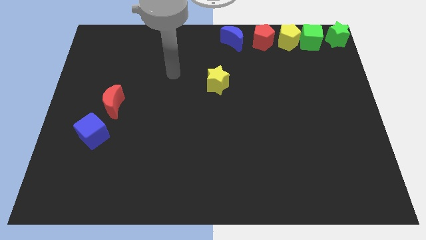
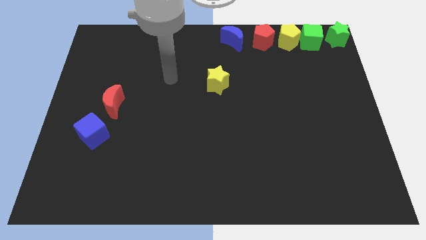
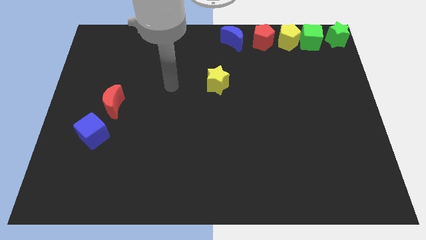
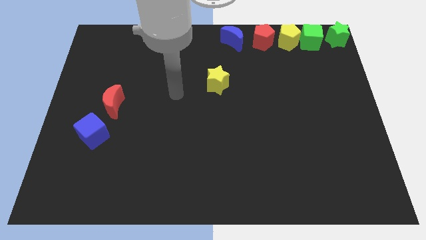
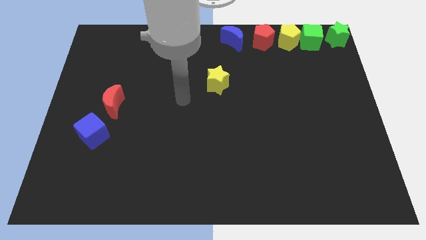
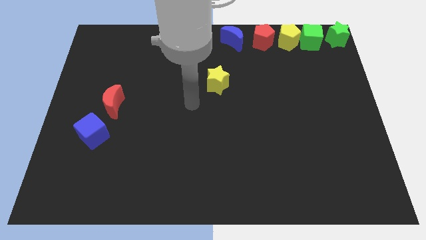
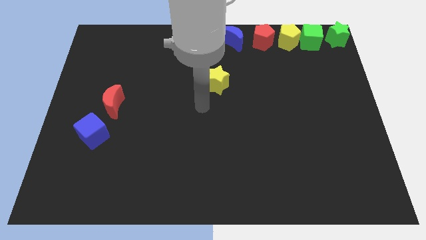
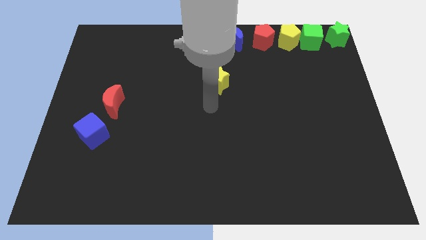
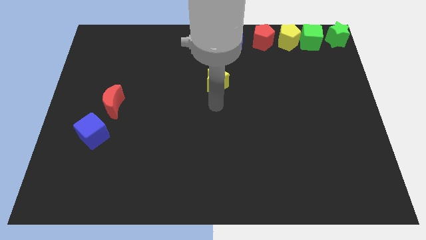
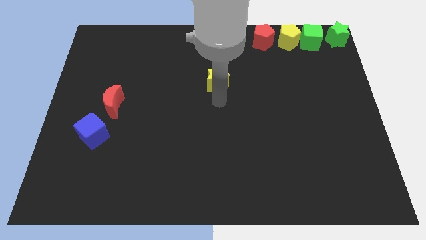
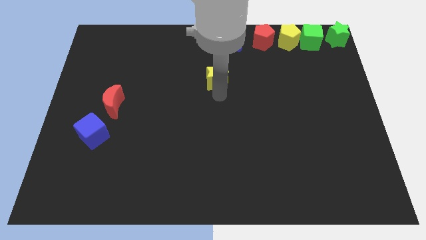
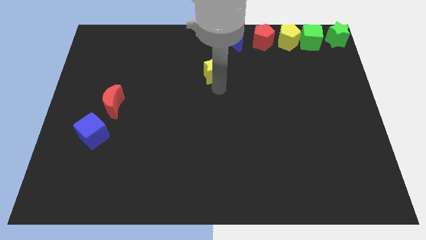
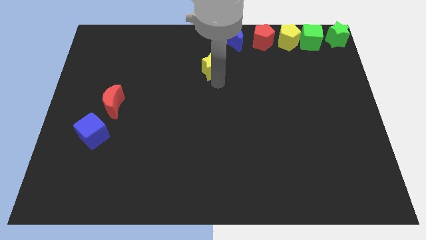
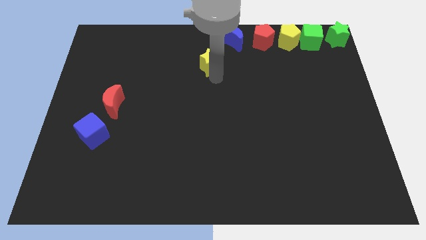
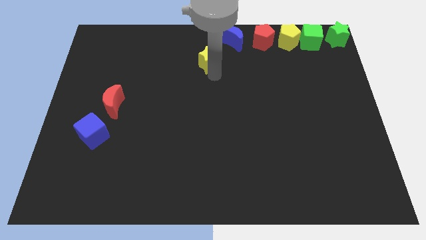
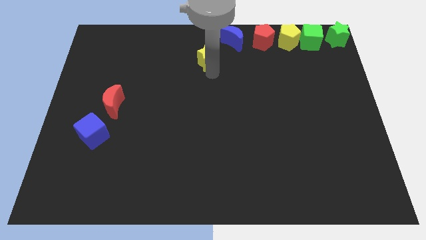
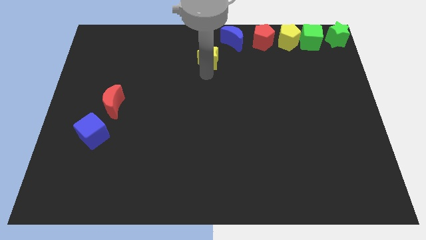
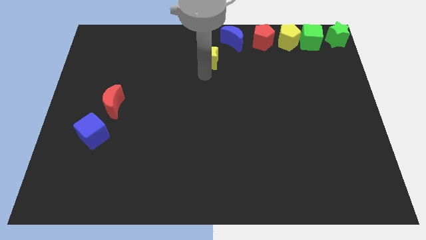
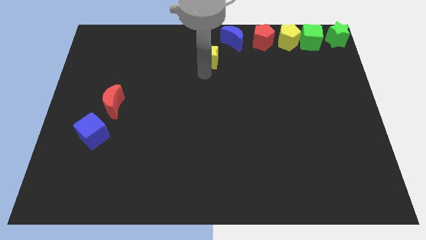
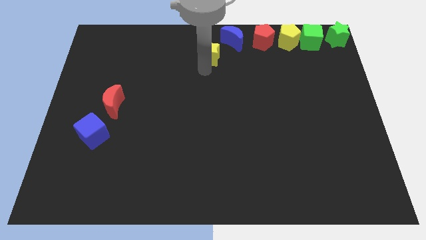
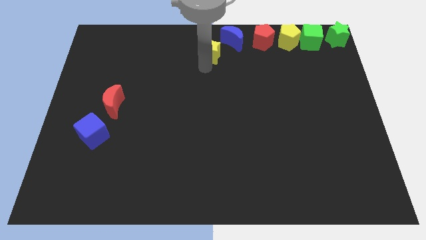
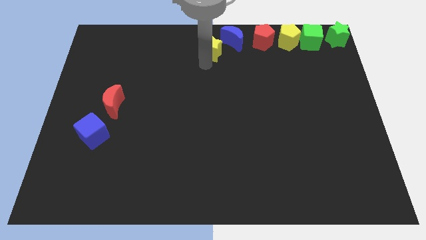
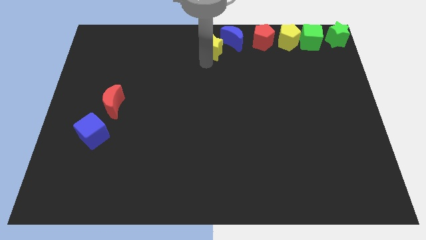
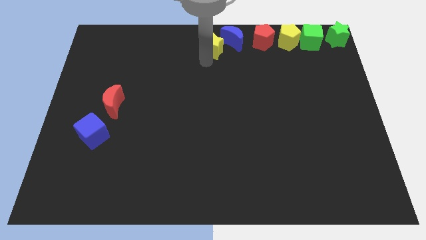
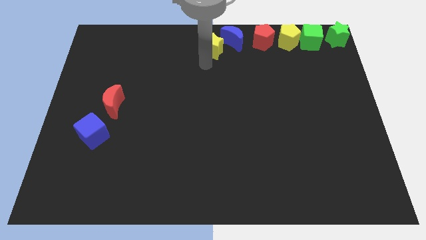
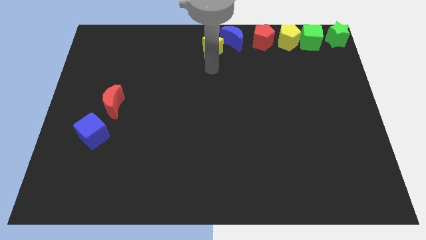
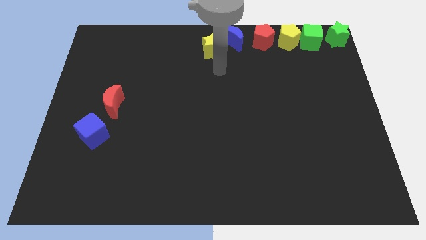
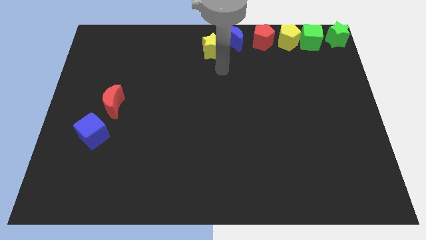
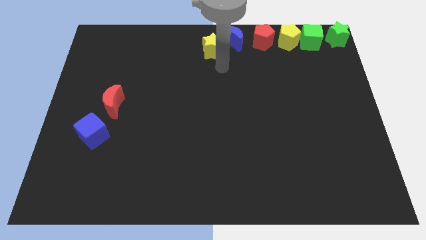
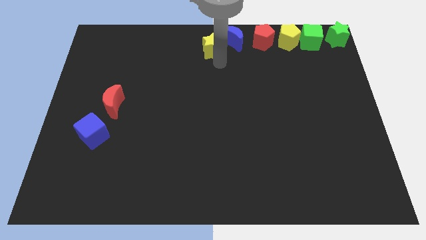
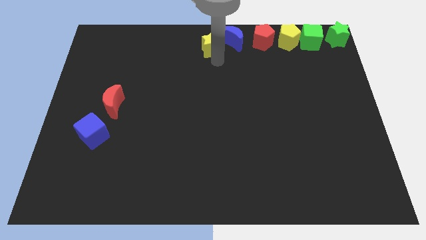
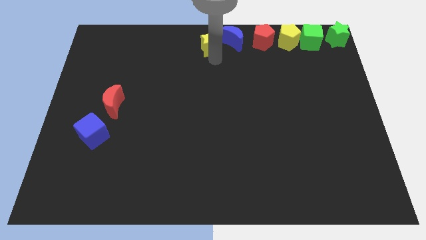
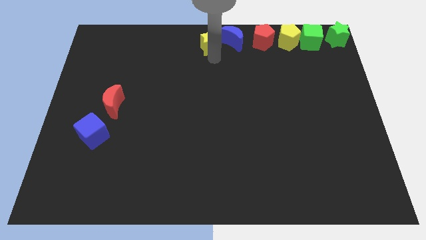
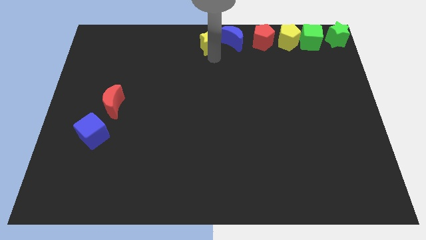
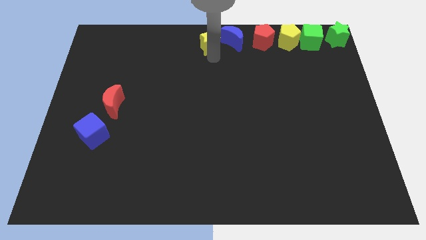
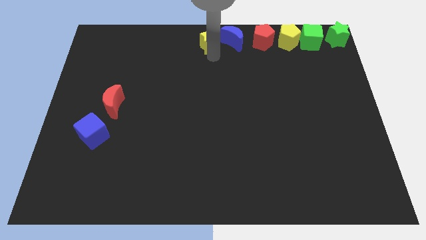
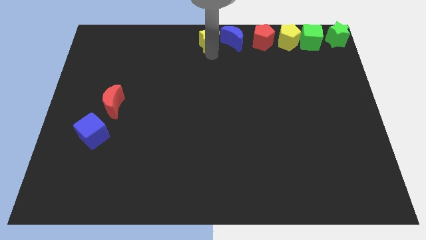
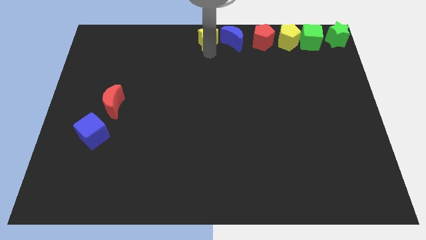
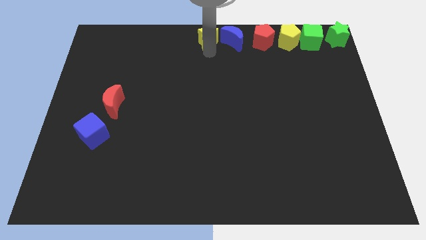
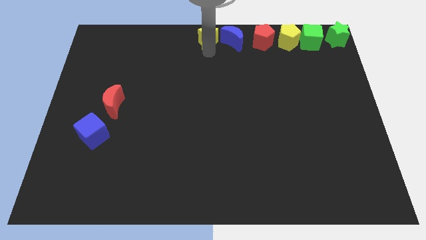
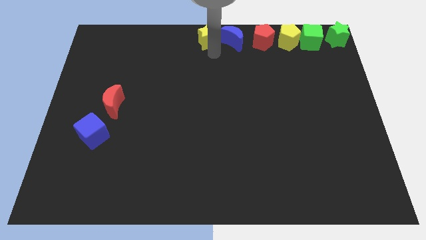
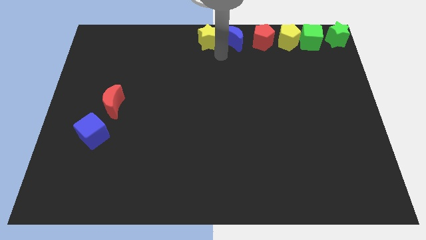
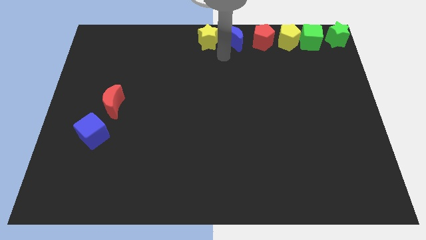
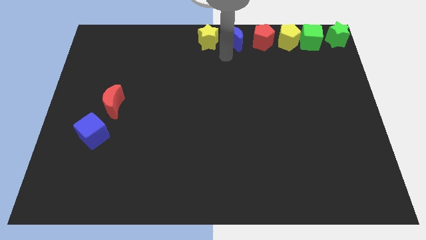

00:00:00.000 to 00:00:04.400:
put the yellow star parallel left to the blue crescent

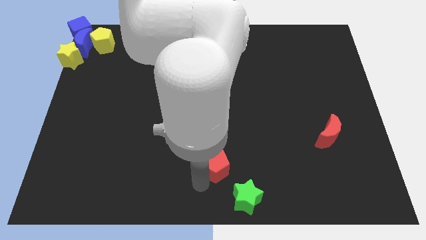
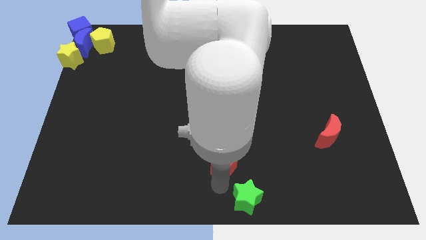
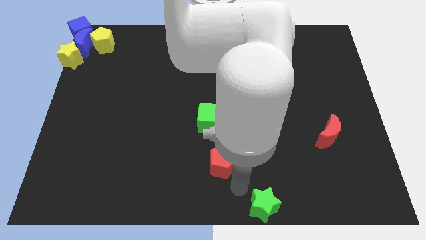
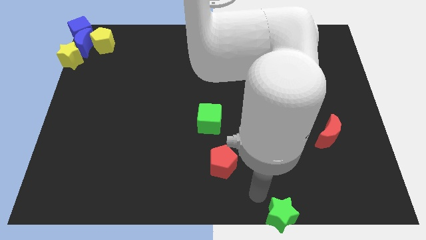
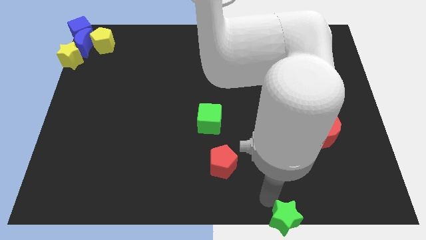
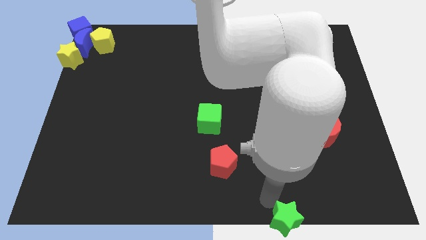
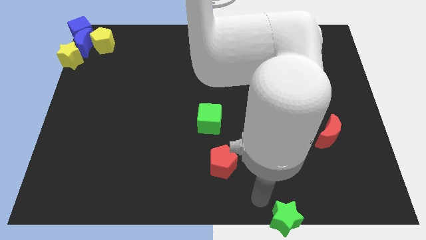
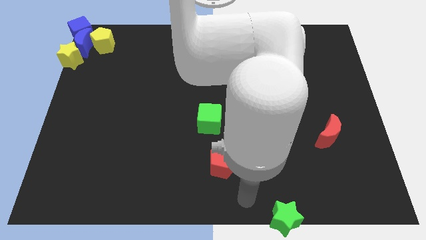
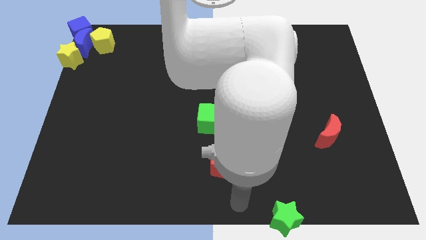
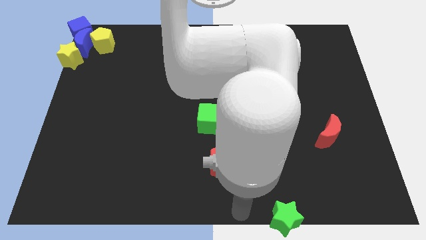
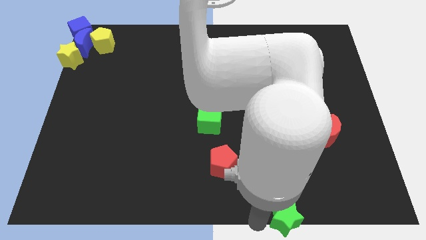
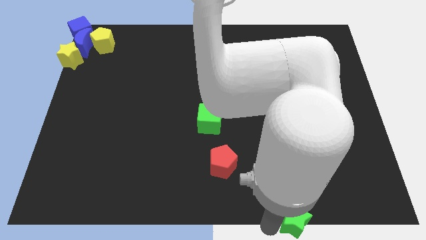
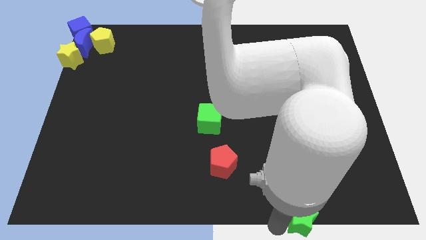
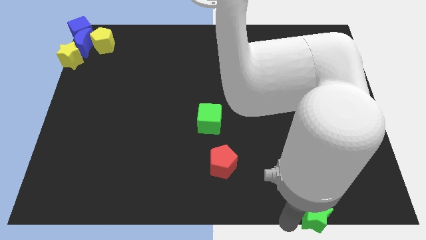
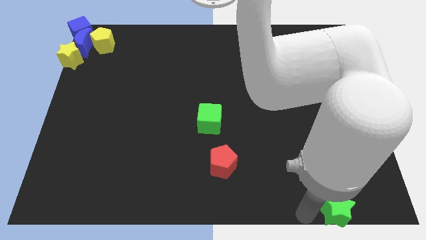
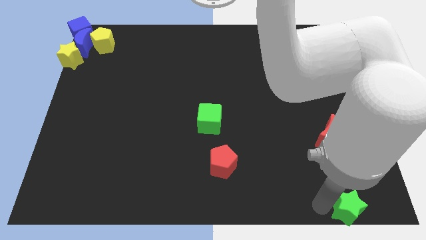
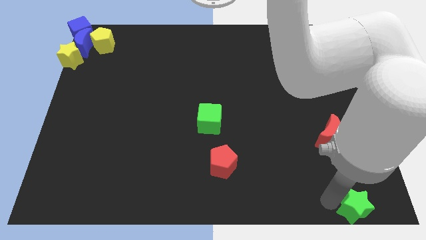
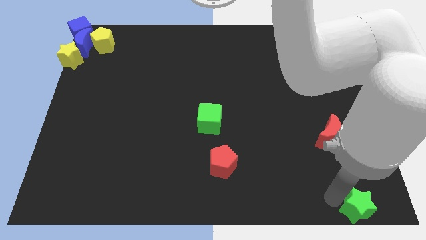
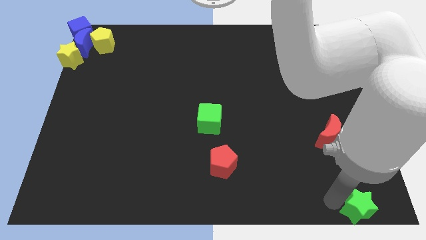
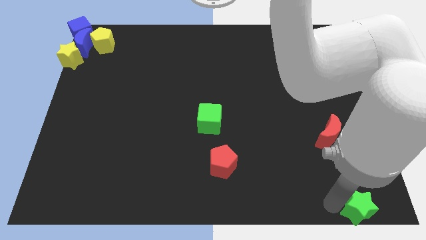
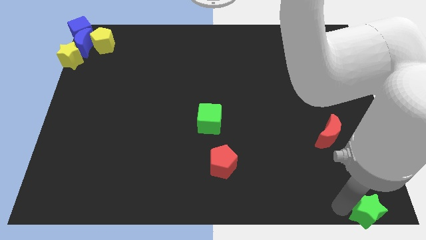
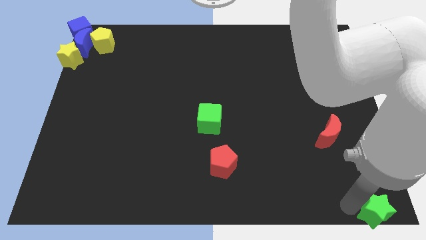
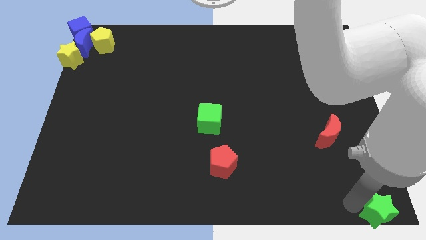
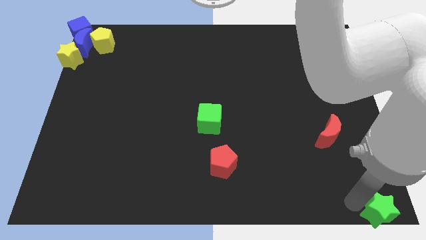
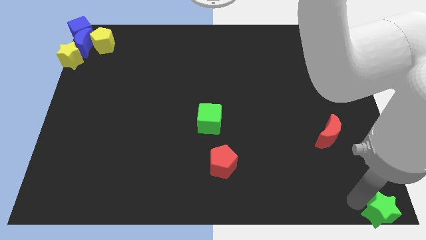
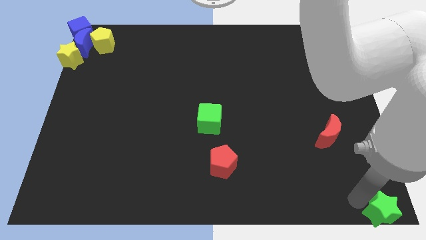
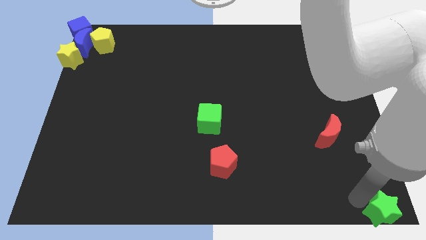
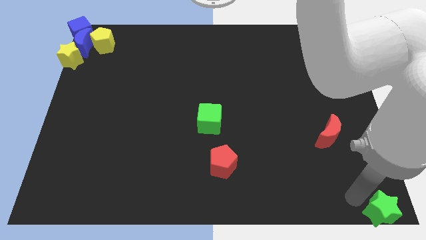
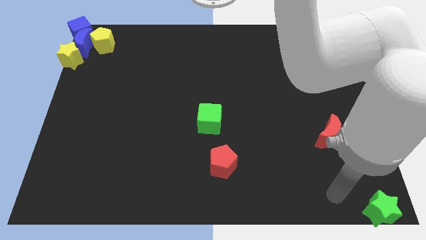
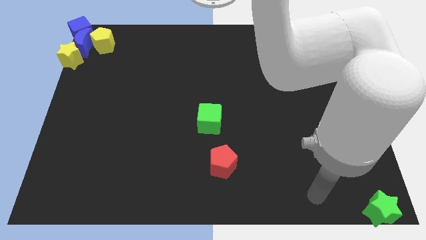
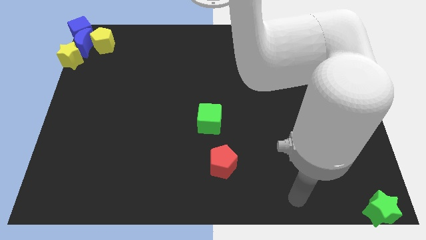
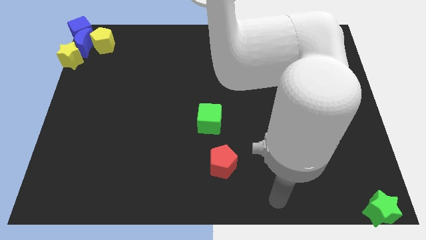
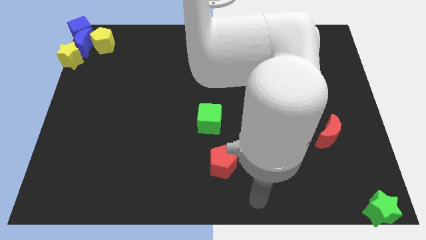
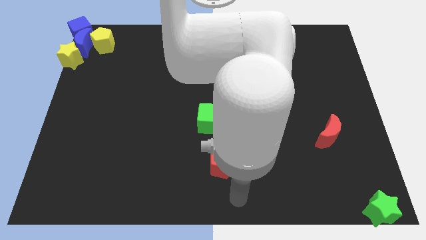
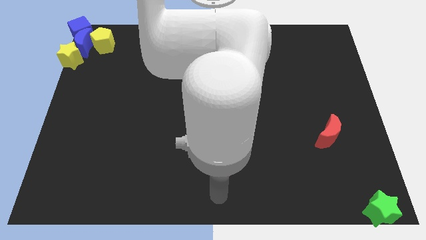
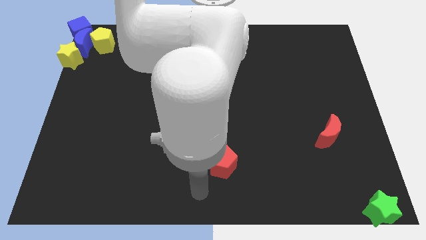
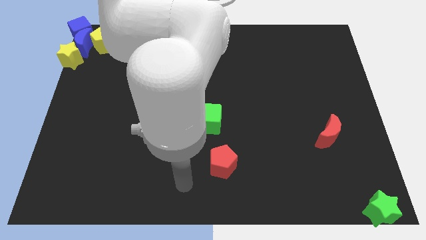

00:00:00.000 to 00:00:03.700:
place the green star at the bottom right corner of the board

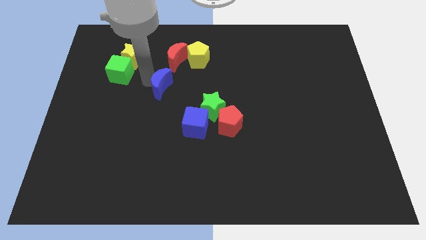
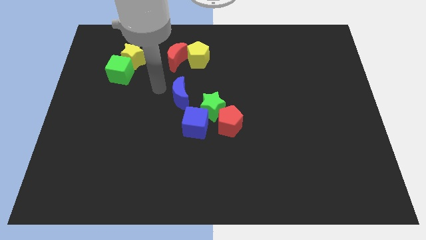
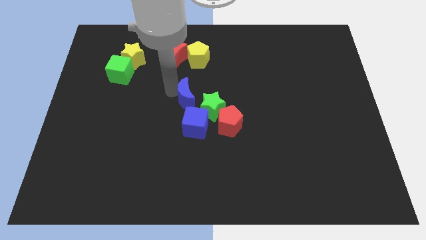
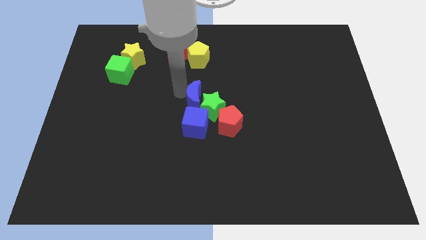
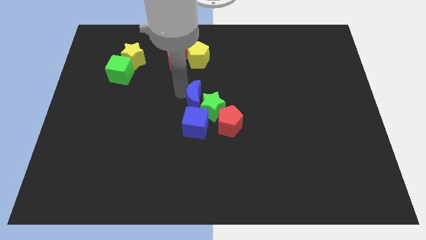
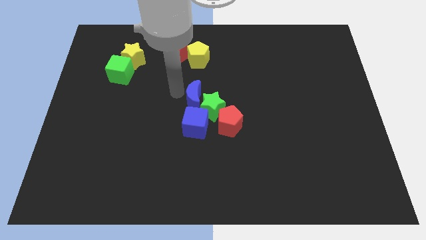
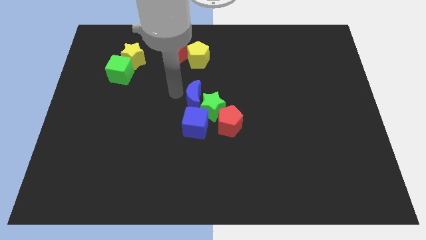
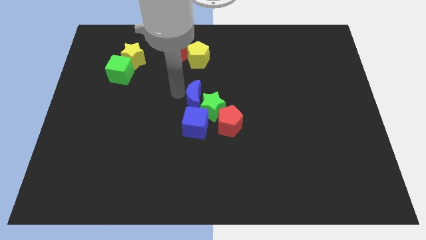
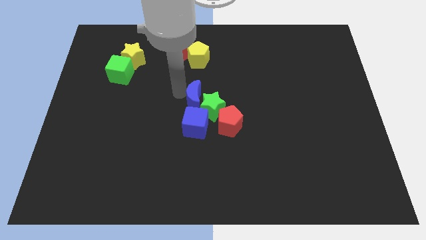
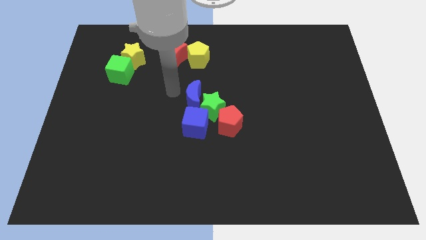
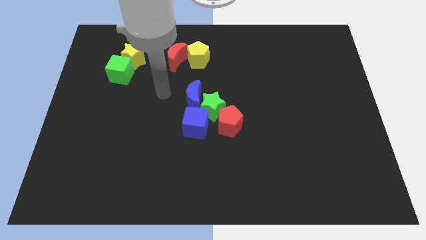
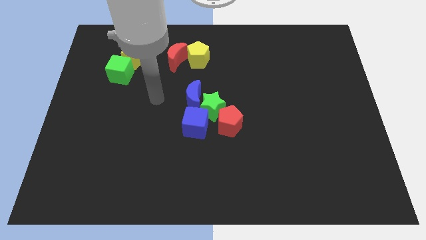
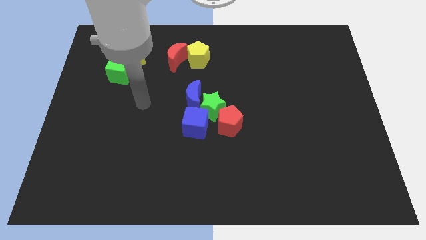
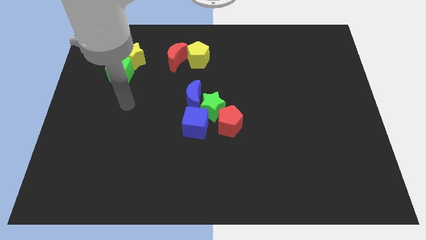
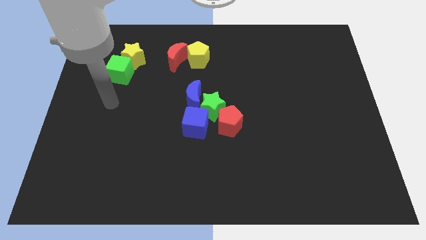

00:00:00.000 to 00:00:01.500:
slide the blue moon towards the center of the board
